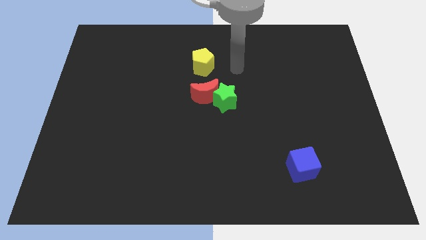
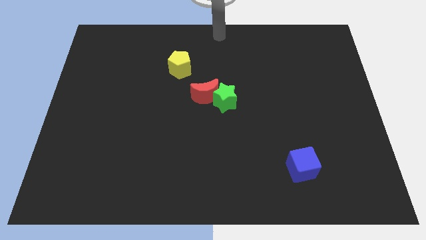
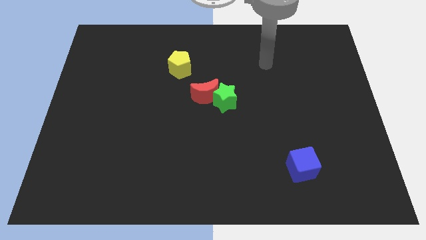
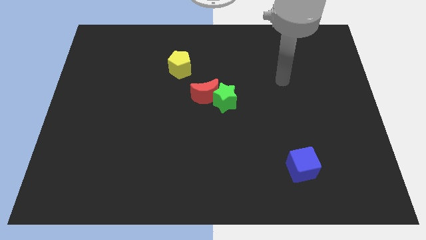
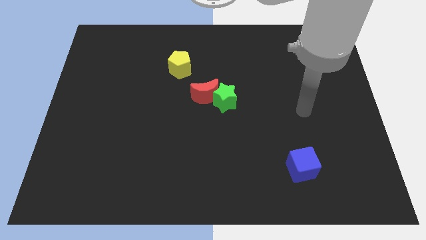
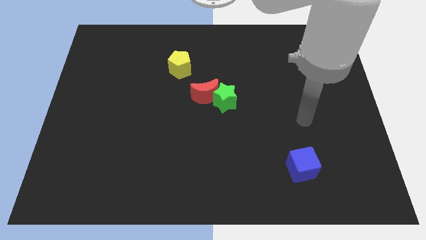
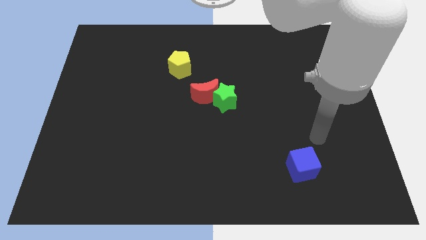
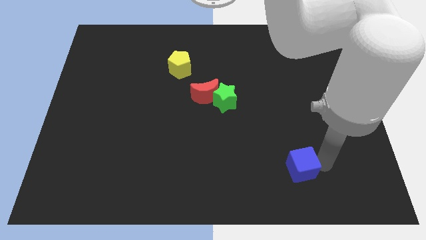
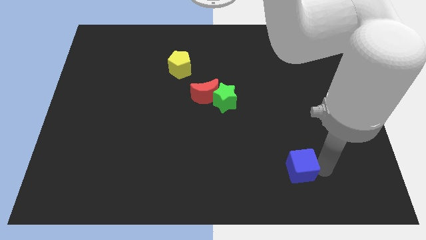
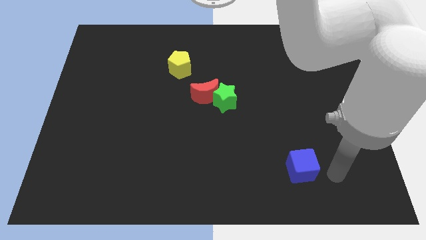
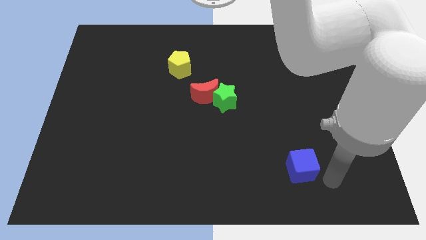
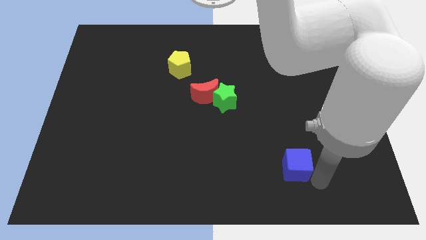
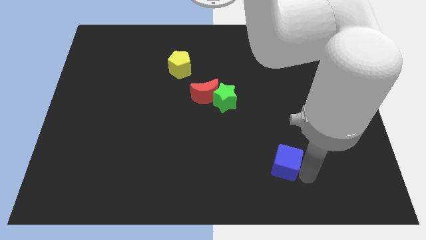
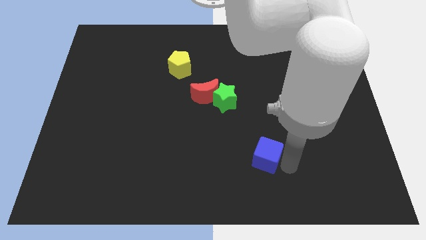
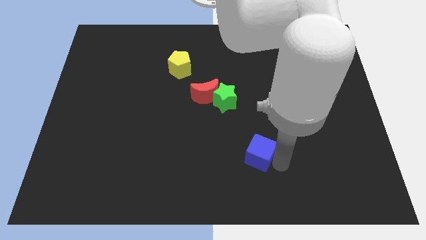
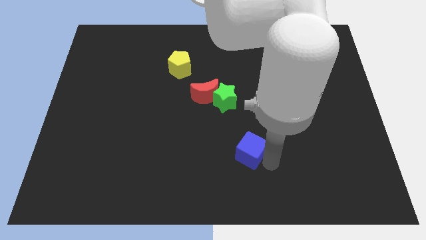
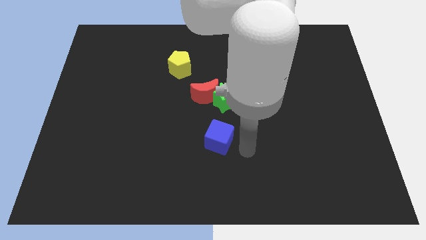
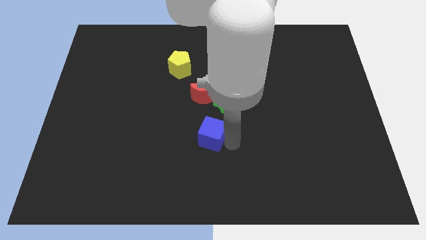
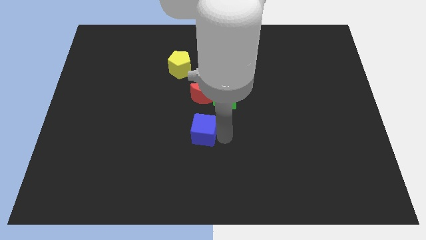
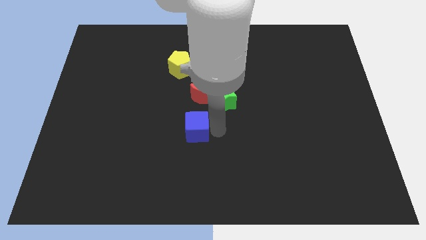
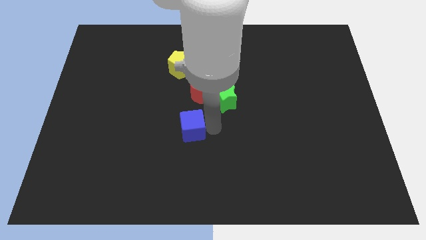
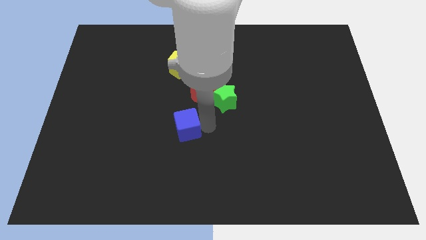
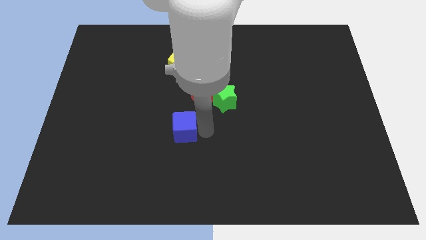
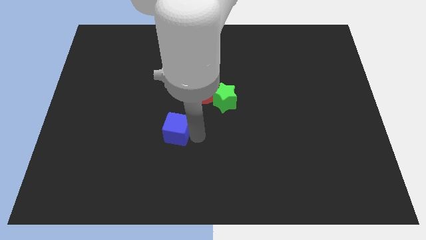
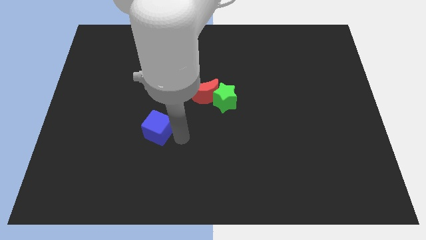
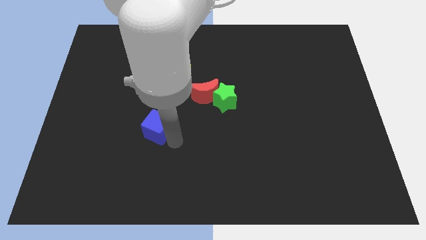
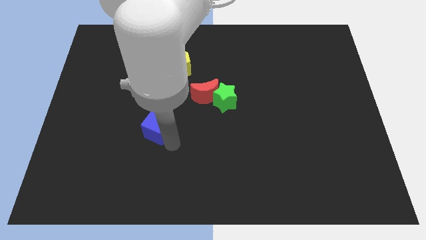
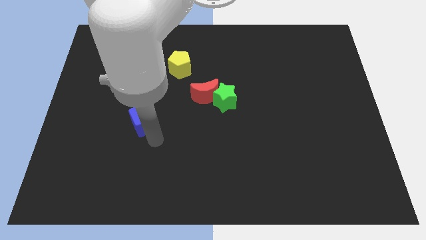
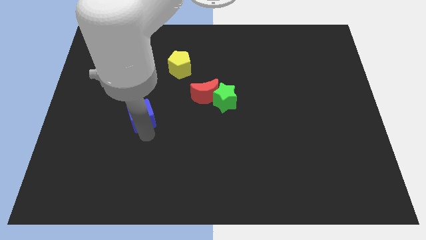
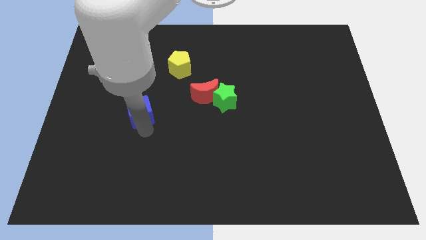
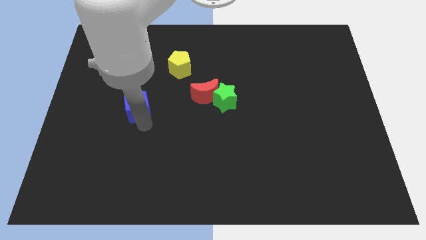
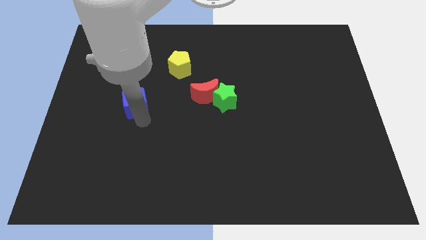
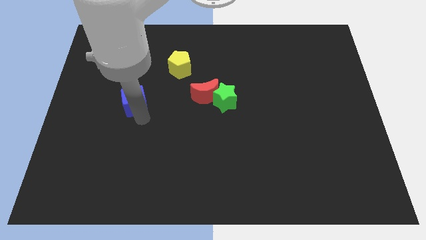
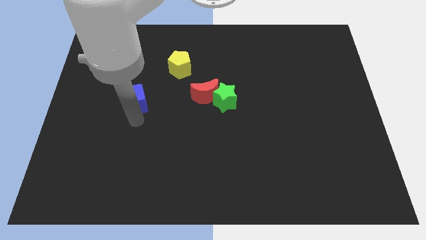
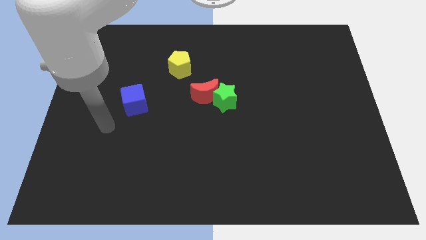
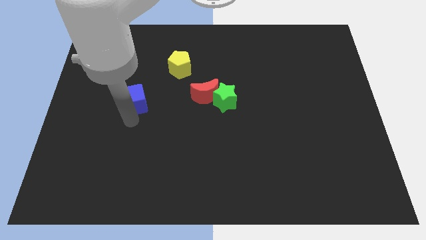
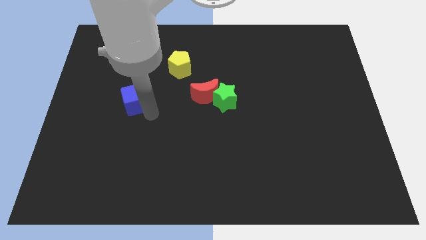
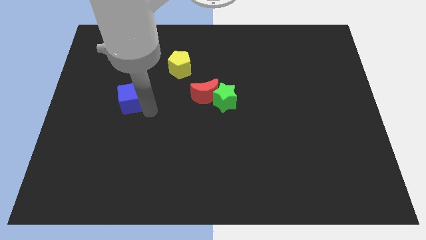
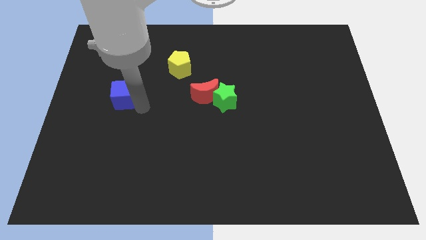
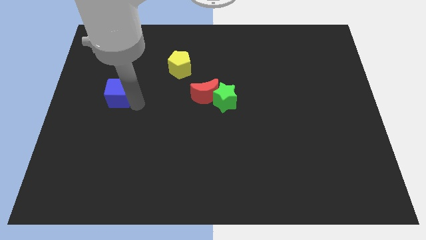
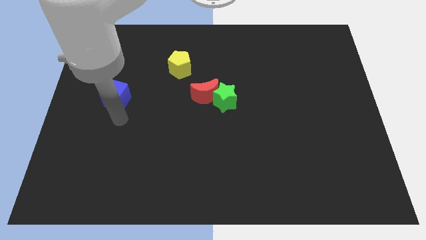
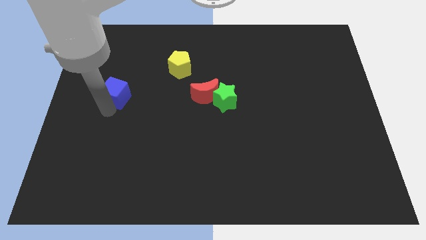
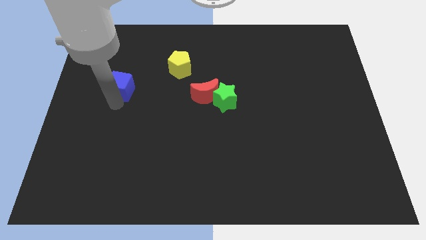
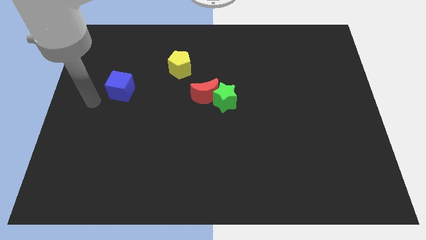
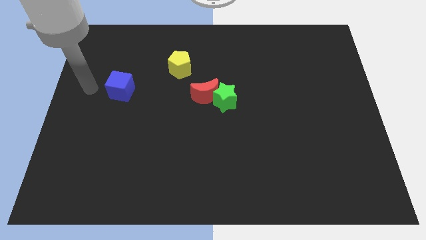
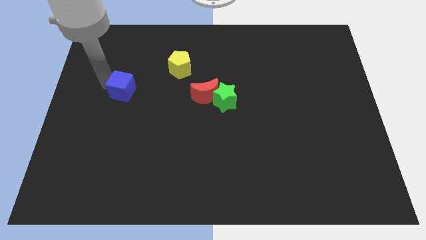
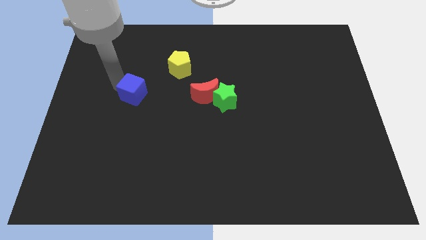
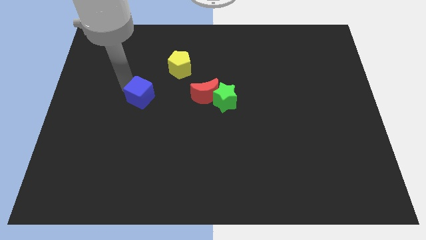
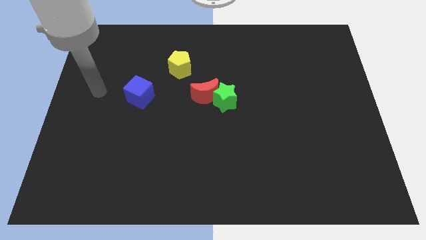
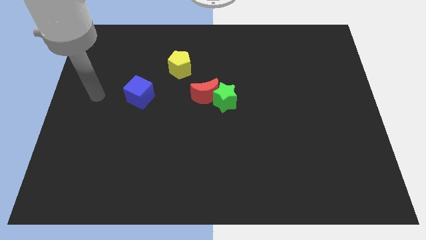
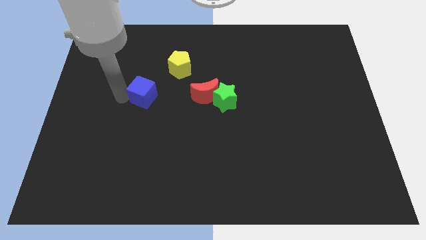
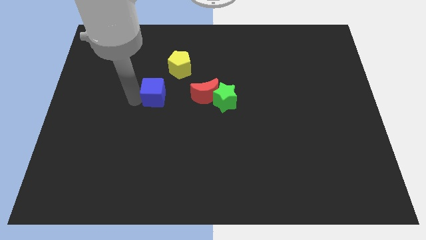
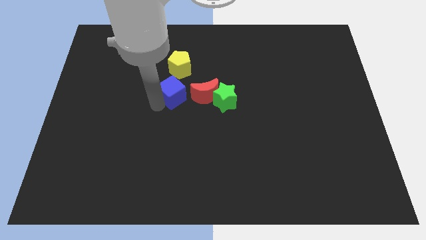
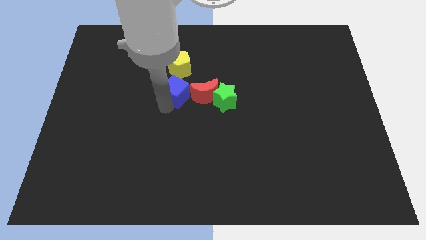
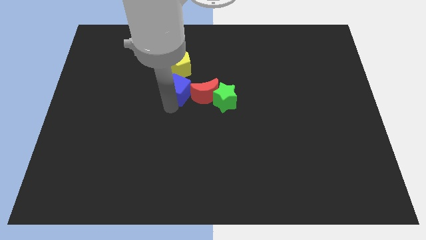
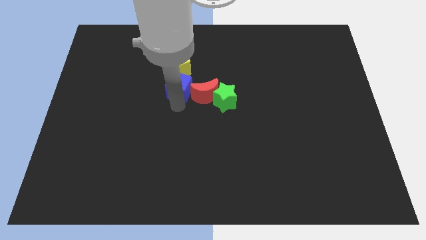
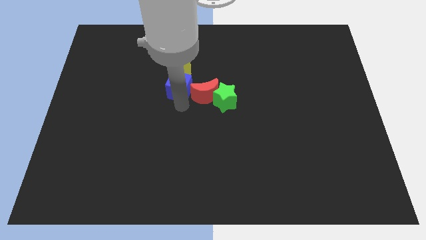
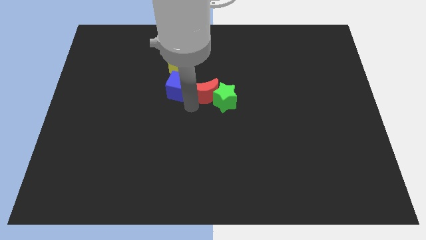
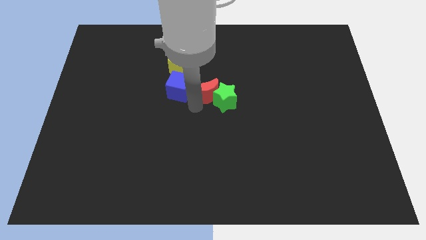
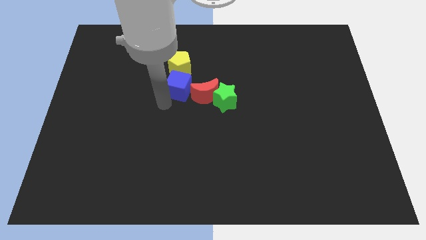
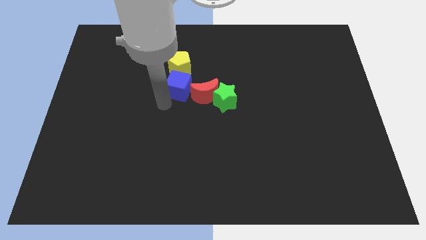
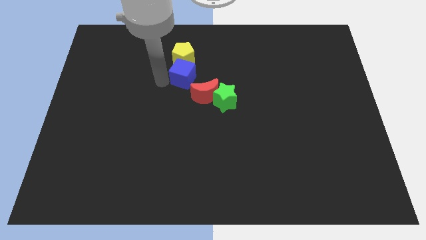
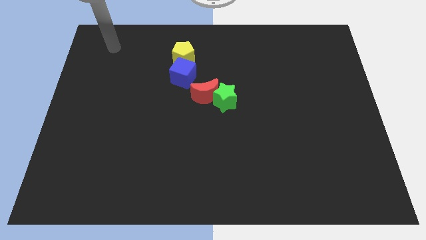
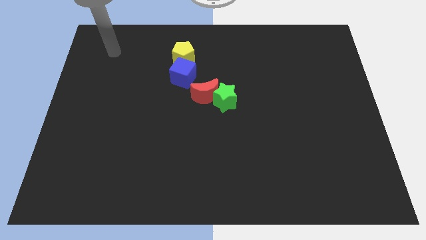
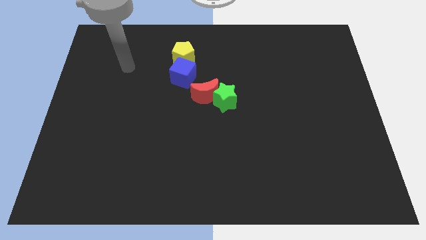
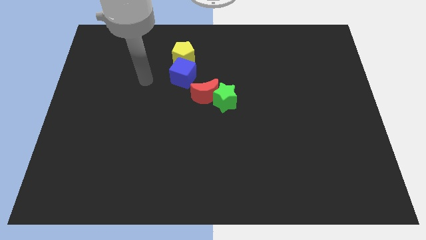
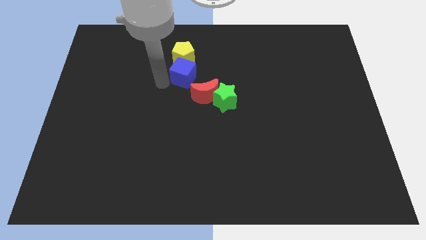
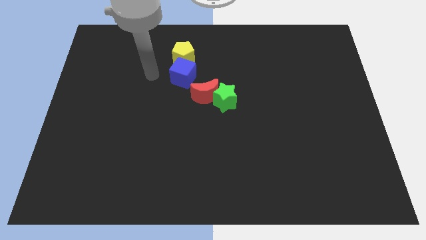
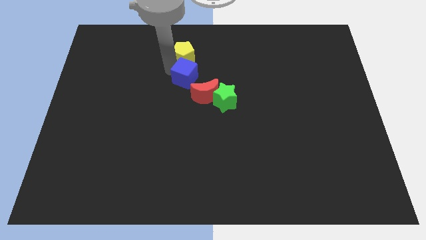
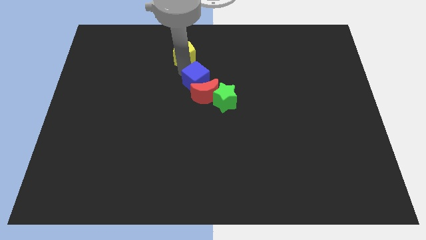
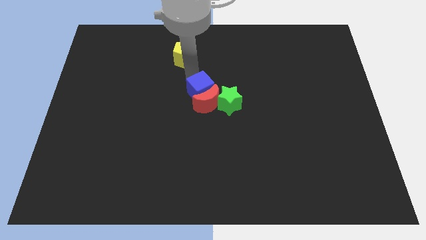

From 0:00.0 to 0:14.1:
push the blue cube close to the moon

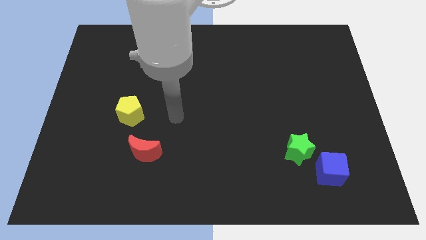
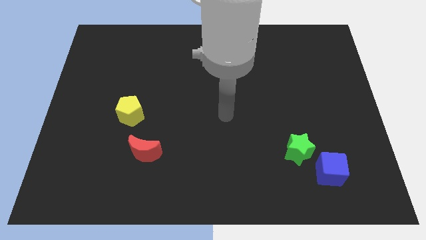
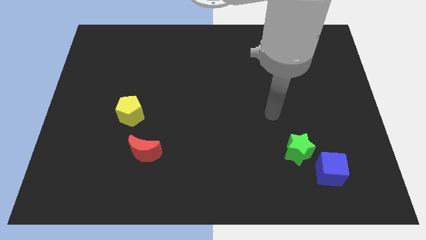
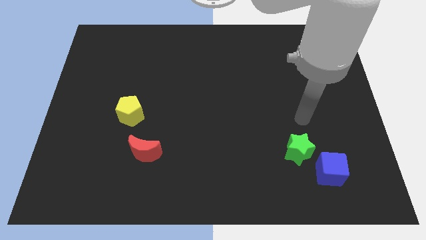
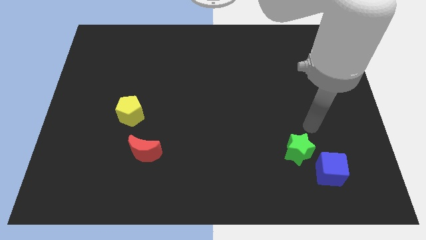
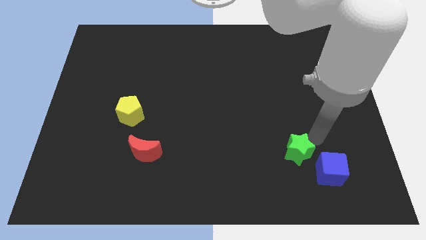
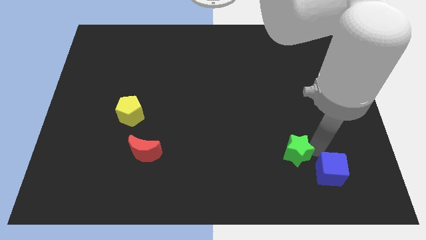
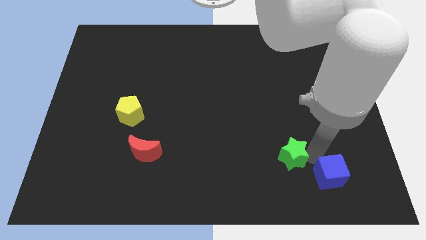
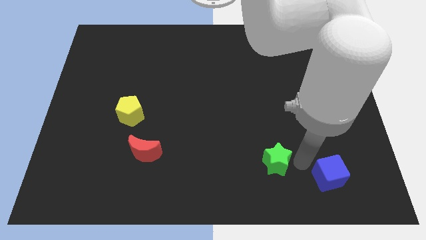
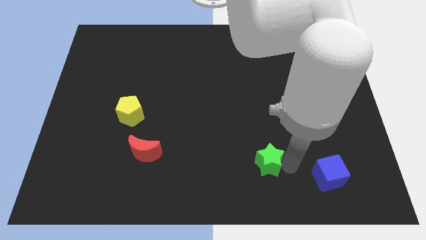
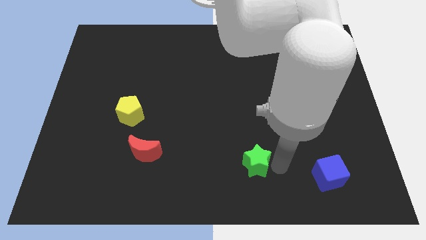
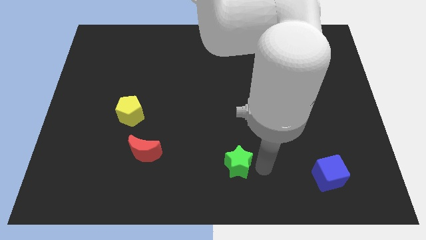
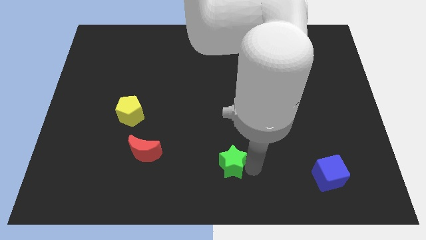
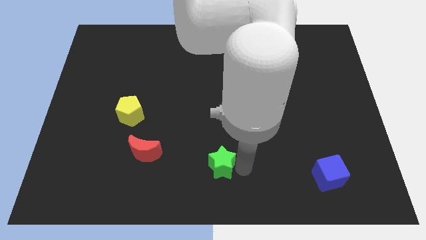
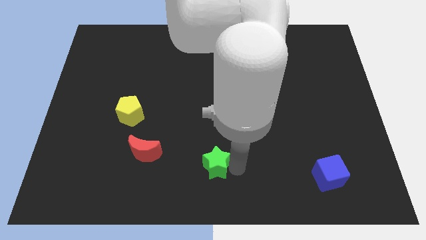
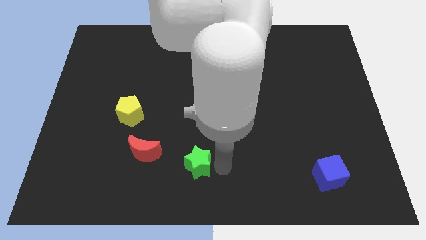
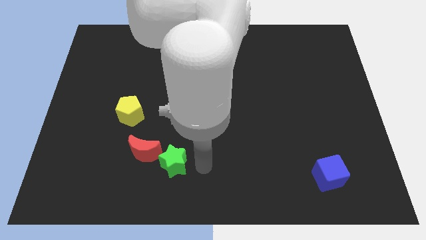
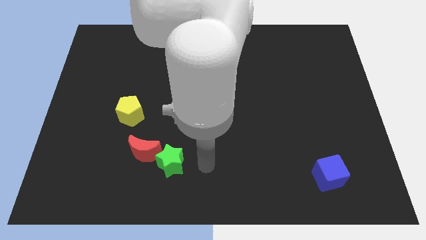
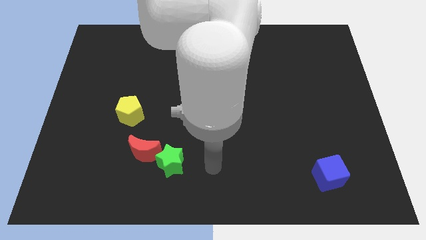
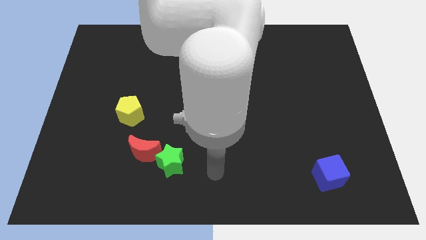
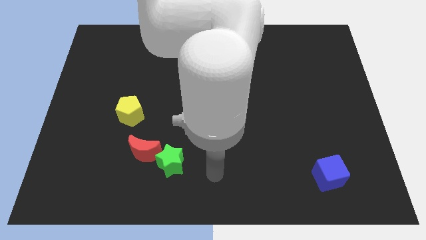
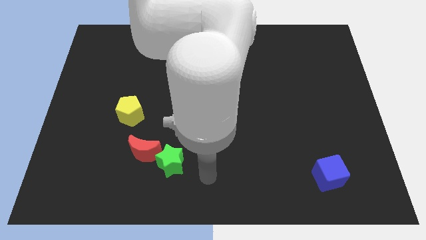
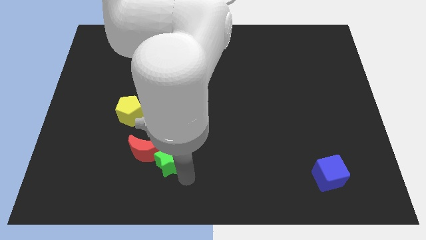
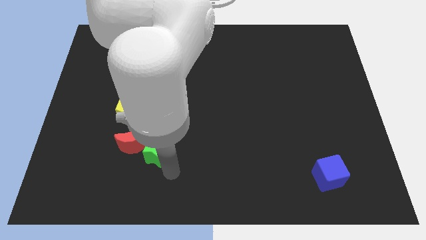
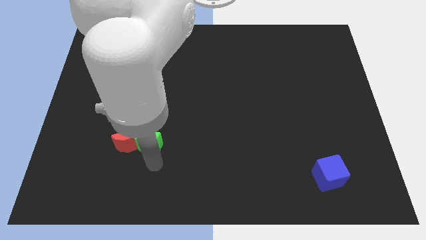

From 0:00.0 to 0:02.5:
slide the star towards the red block
